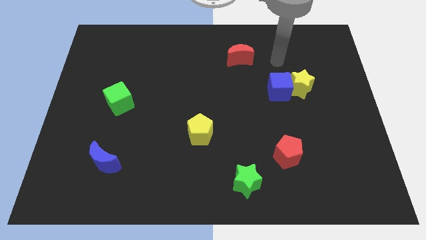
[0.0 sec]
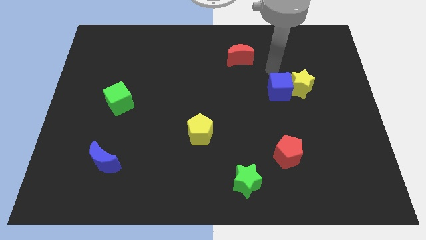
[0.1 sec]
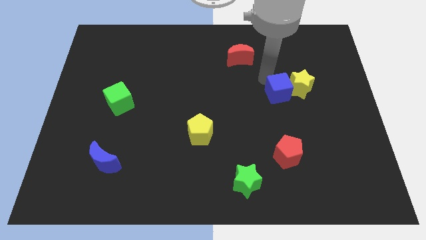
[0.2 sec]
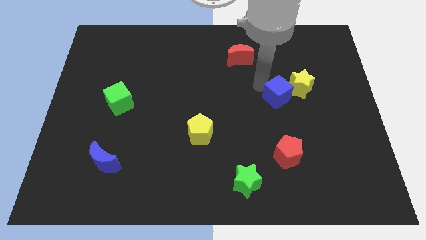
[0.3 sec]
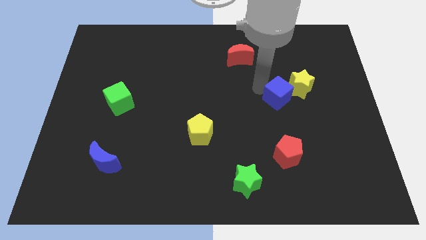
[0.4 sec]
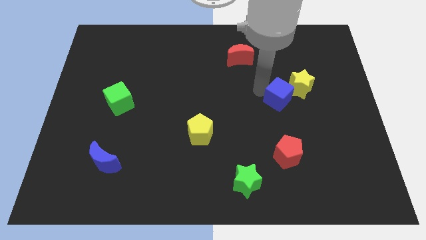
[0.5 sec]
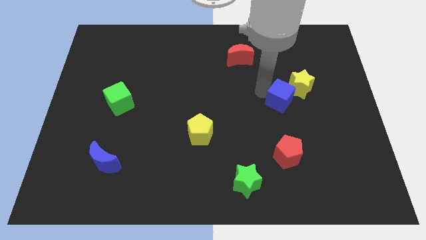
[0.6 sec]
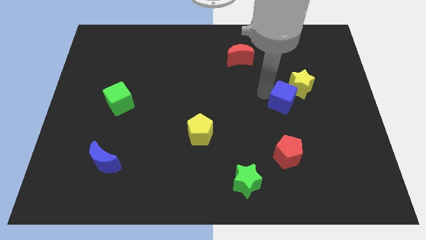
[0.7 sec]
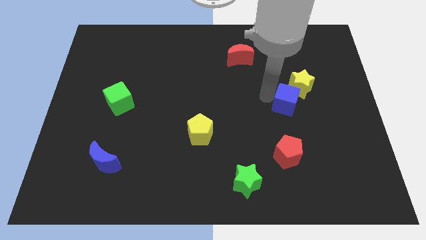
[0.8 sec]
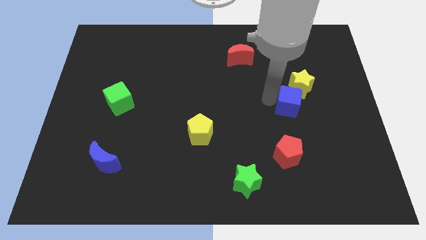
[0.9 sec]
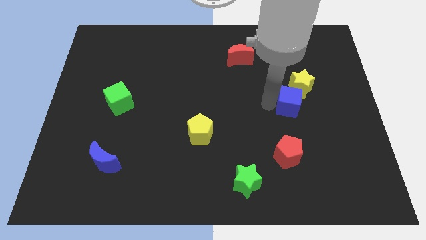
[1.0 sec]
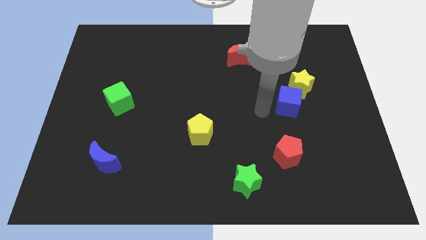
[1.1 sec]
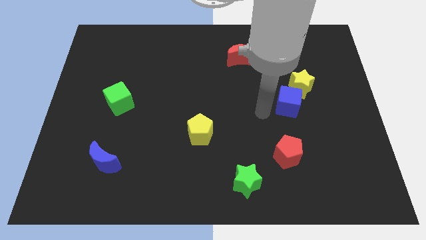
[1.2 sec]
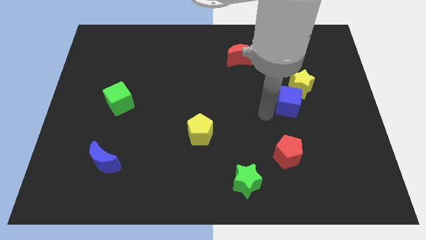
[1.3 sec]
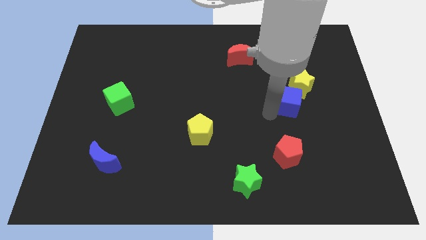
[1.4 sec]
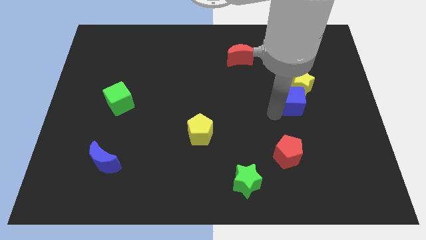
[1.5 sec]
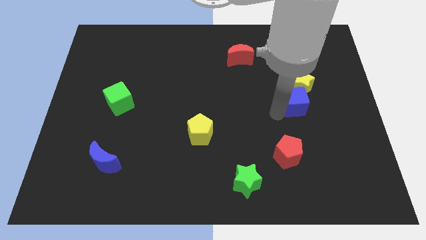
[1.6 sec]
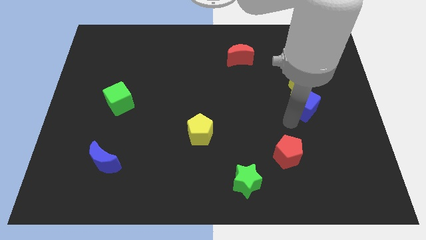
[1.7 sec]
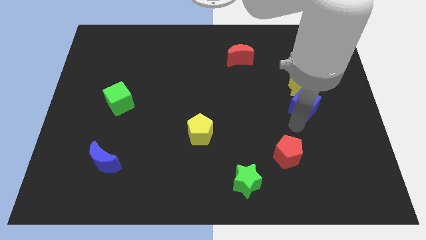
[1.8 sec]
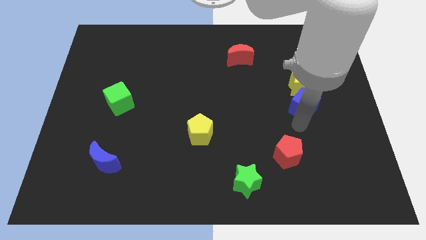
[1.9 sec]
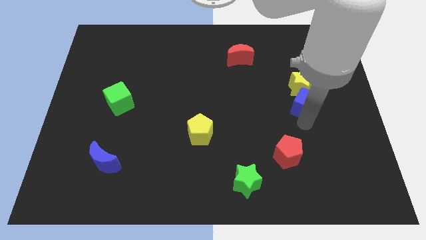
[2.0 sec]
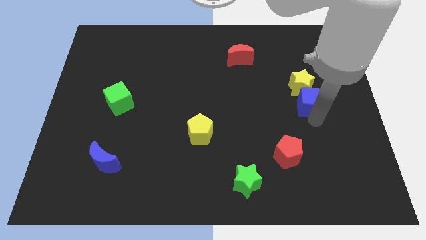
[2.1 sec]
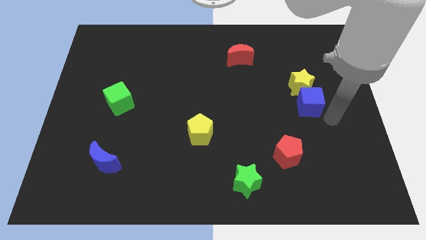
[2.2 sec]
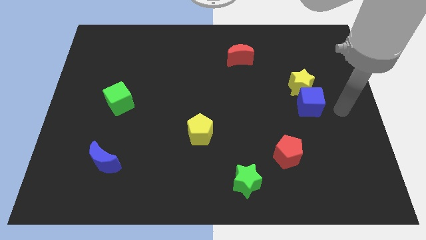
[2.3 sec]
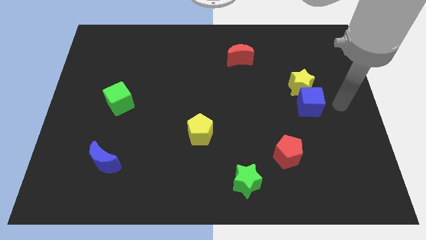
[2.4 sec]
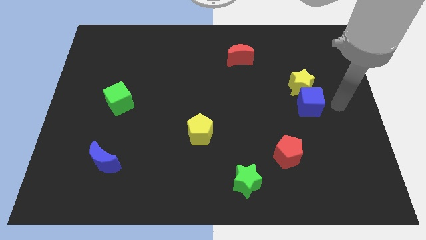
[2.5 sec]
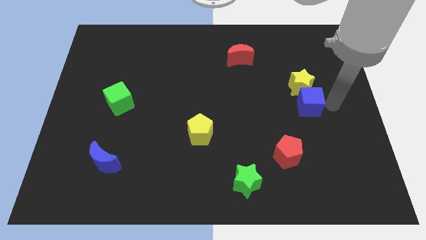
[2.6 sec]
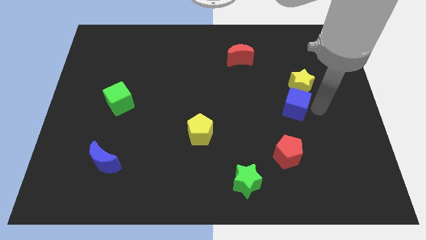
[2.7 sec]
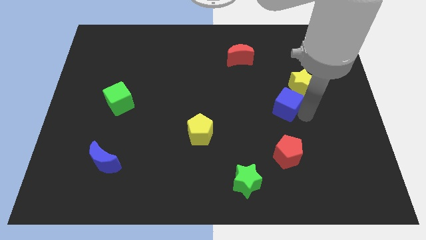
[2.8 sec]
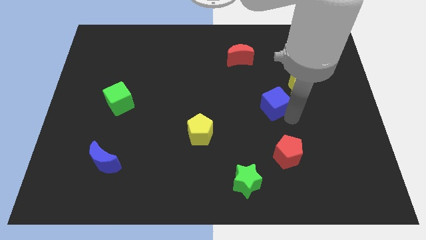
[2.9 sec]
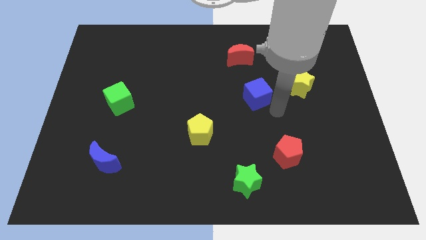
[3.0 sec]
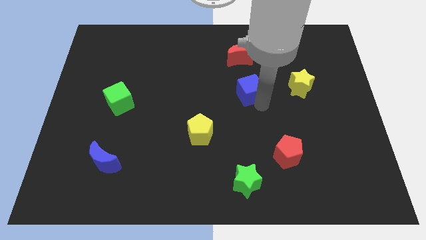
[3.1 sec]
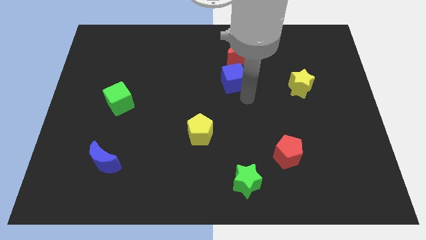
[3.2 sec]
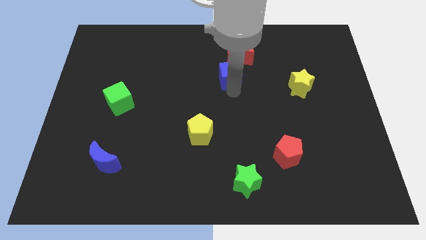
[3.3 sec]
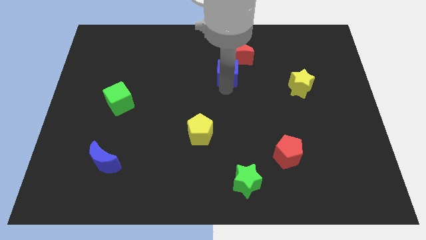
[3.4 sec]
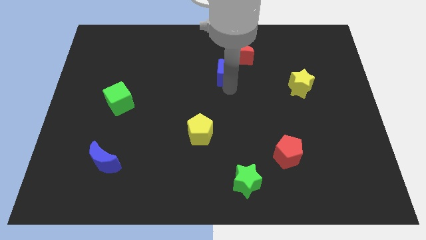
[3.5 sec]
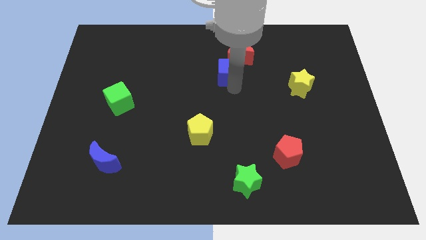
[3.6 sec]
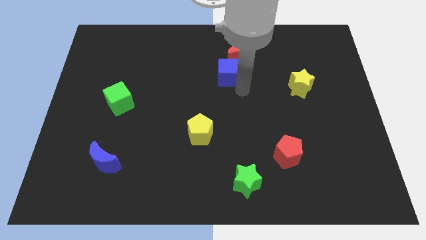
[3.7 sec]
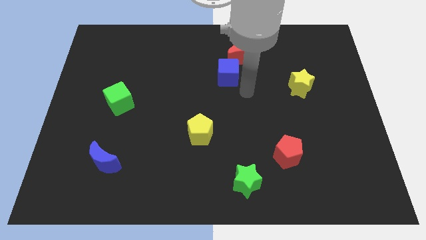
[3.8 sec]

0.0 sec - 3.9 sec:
place the blue cube below the red crescent

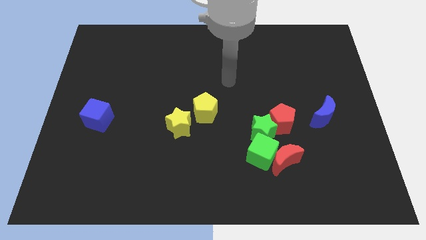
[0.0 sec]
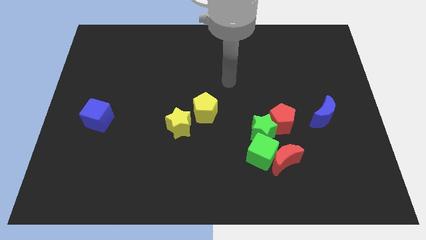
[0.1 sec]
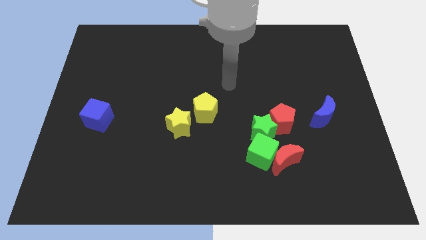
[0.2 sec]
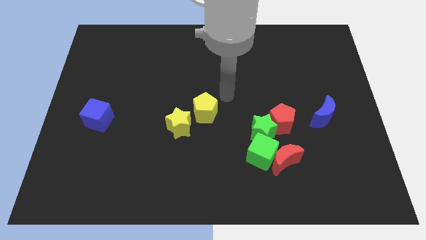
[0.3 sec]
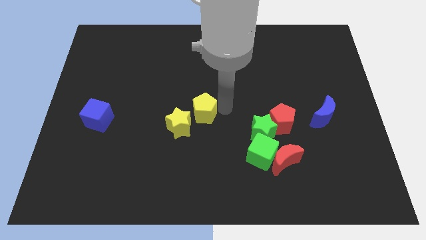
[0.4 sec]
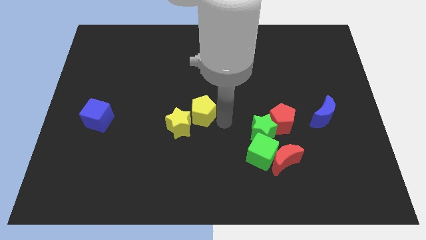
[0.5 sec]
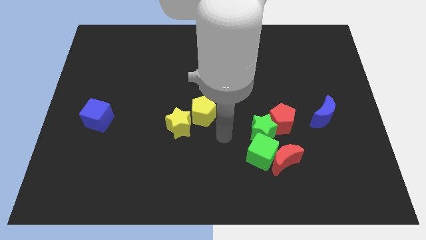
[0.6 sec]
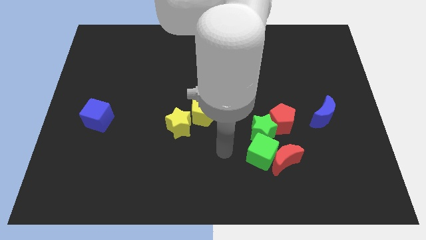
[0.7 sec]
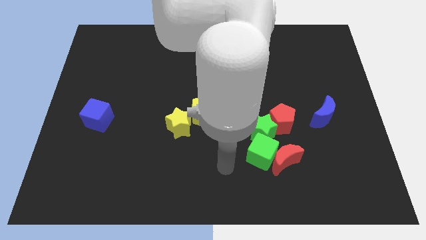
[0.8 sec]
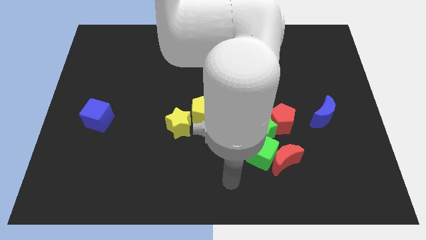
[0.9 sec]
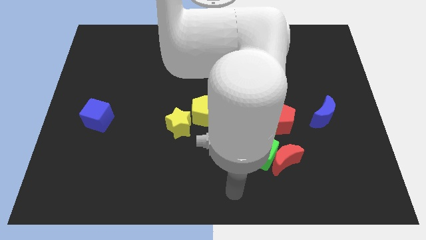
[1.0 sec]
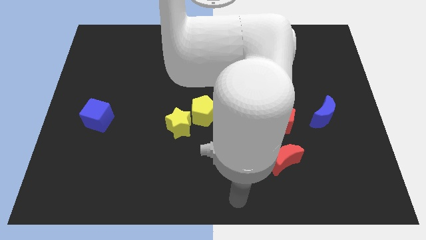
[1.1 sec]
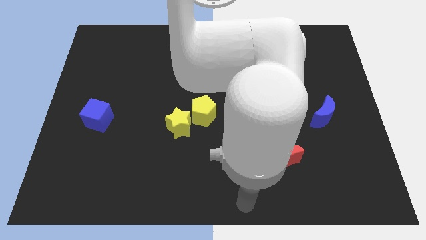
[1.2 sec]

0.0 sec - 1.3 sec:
move the arm downwards of the board

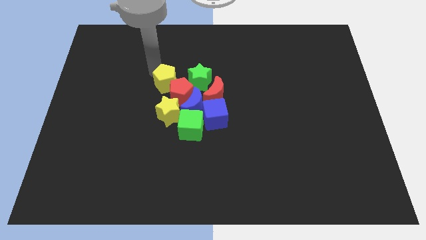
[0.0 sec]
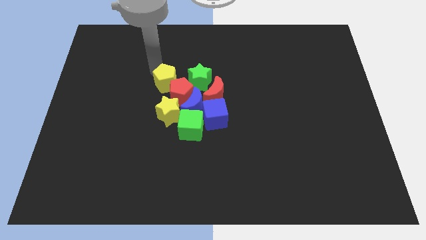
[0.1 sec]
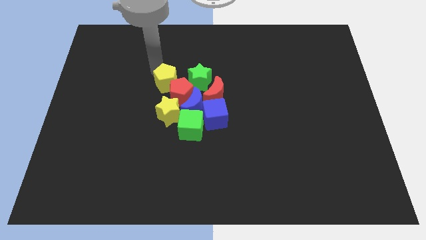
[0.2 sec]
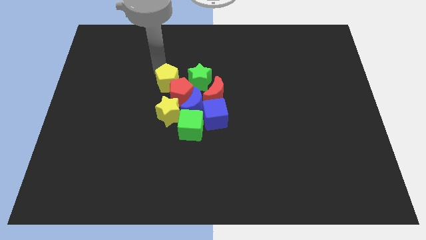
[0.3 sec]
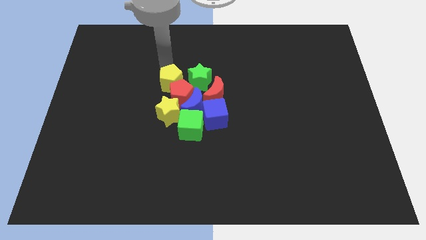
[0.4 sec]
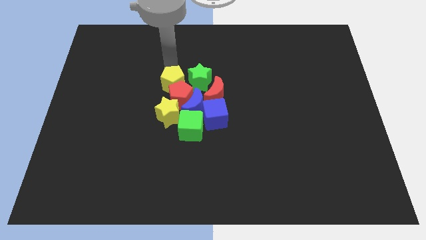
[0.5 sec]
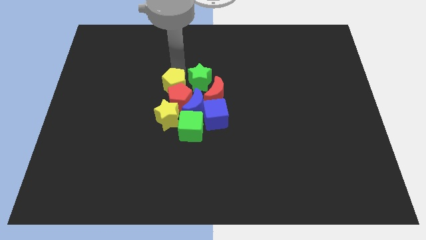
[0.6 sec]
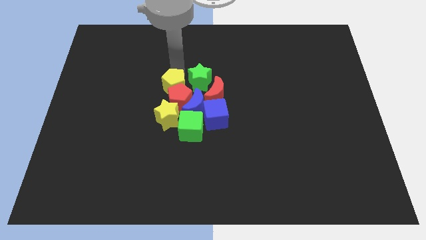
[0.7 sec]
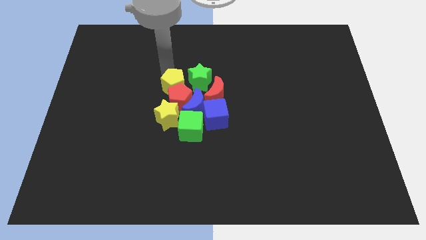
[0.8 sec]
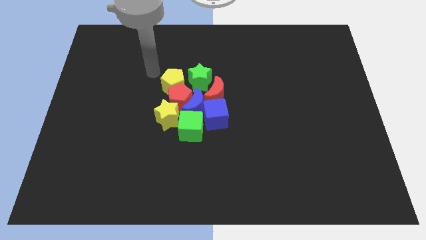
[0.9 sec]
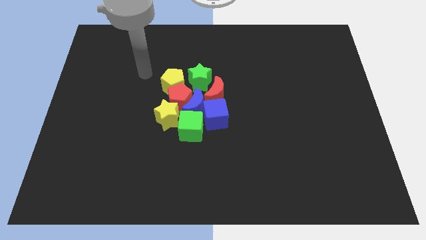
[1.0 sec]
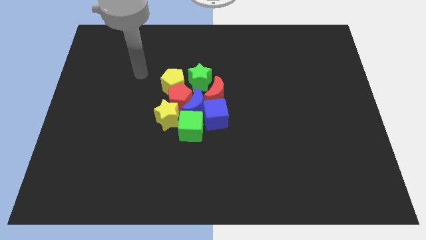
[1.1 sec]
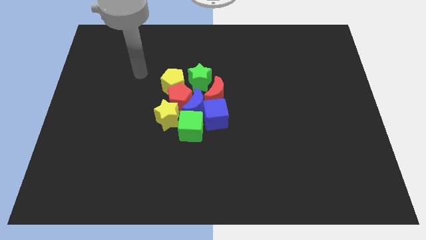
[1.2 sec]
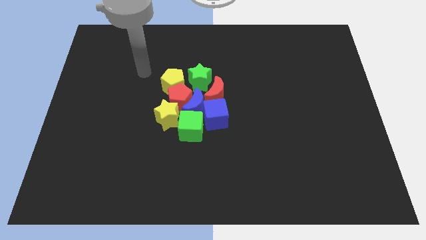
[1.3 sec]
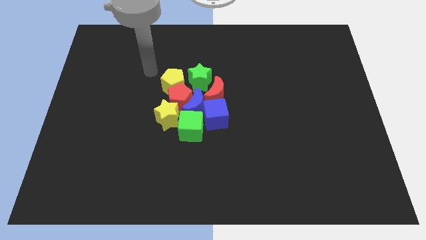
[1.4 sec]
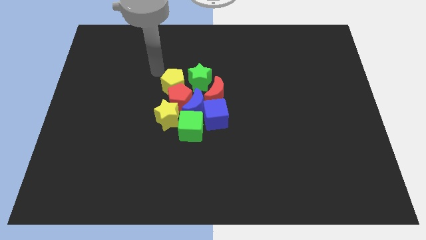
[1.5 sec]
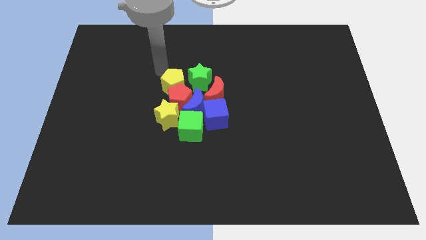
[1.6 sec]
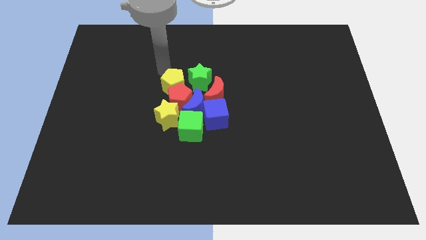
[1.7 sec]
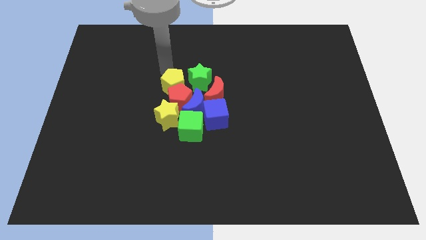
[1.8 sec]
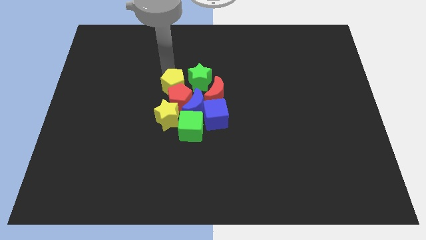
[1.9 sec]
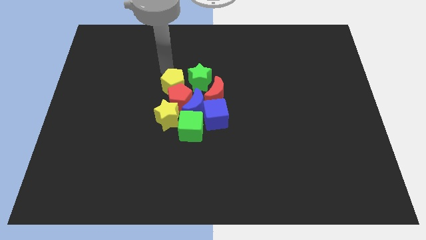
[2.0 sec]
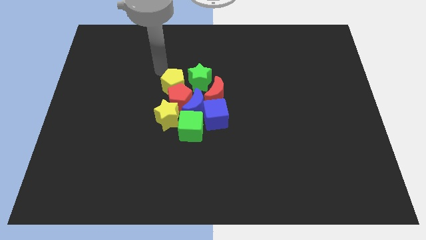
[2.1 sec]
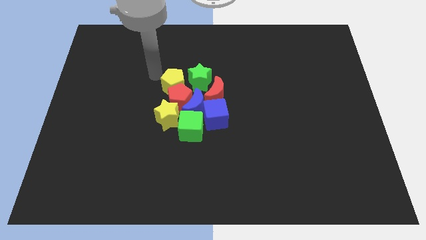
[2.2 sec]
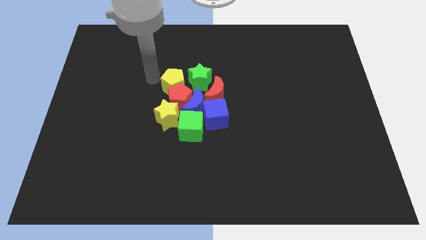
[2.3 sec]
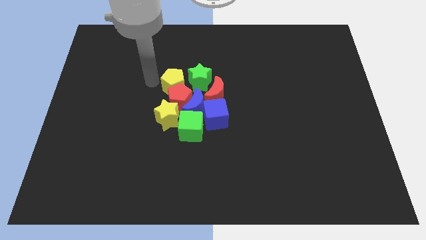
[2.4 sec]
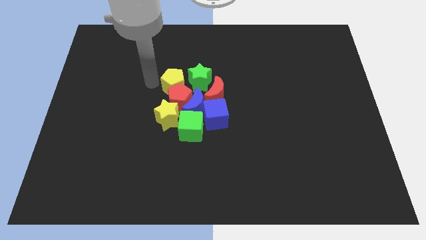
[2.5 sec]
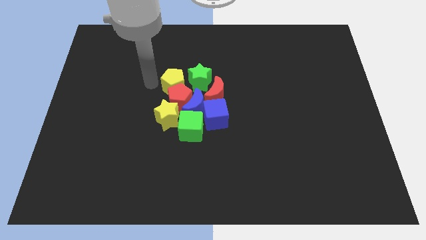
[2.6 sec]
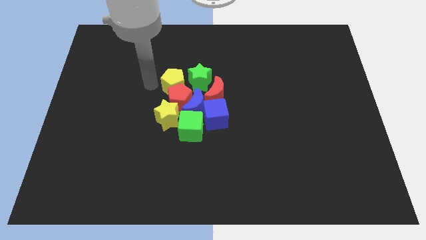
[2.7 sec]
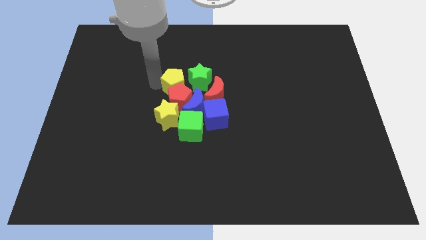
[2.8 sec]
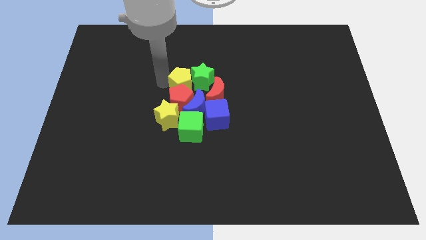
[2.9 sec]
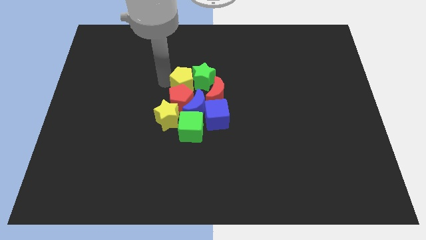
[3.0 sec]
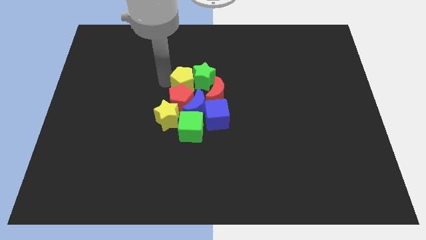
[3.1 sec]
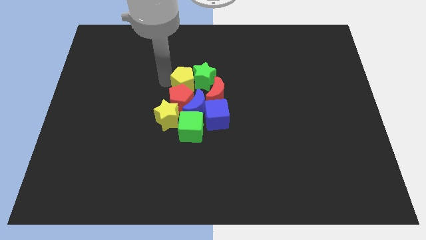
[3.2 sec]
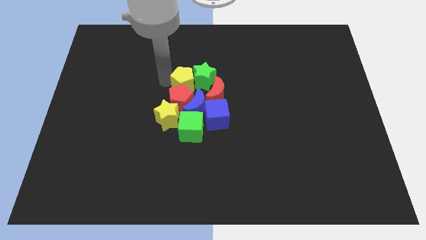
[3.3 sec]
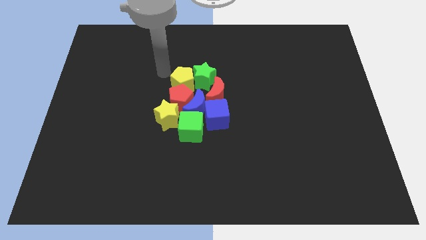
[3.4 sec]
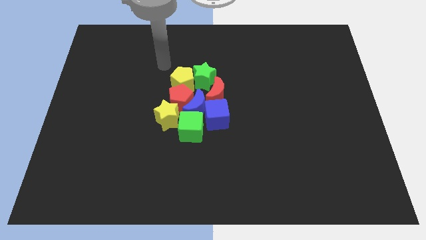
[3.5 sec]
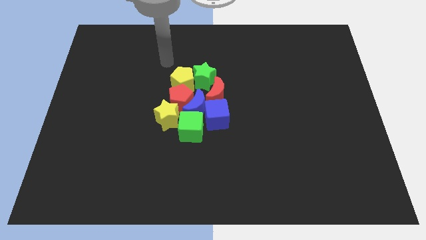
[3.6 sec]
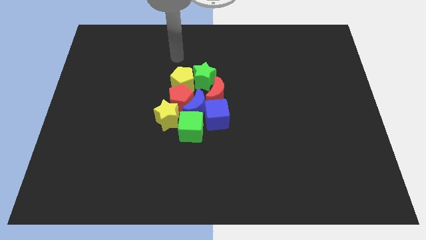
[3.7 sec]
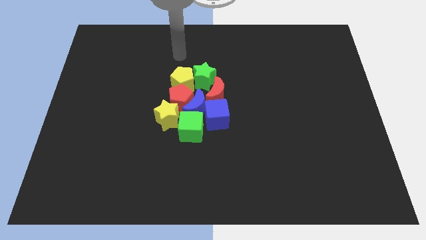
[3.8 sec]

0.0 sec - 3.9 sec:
adjust the yellow pentagon to the group of blocks
